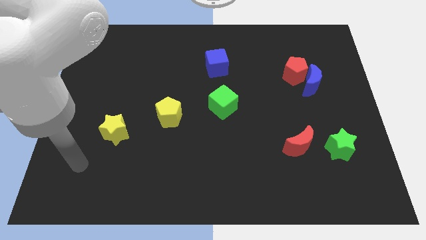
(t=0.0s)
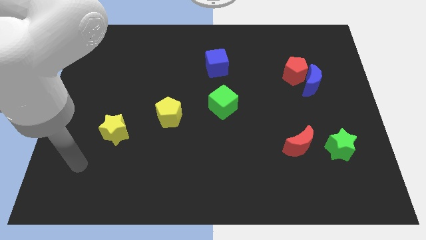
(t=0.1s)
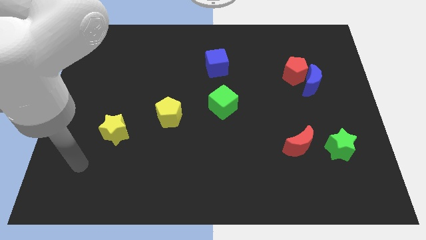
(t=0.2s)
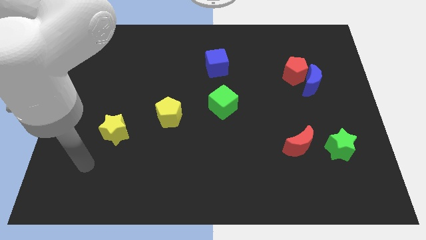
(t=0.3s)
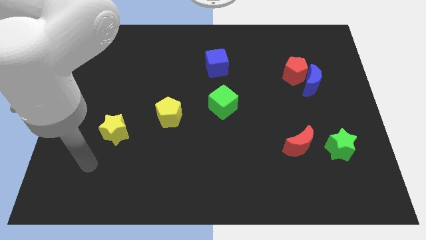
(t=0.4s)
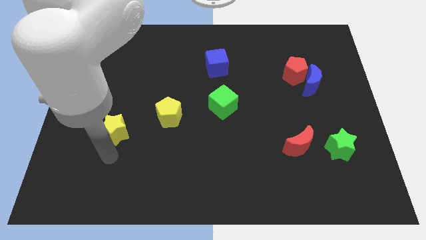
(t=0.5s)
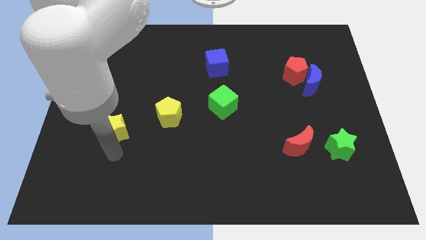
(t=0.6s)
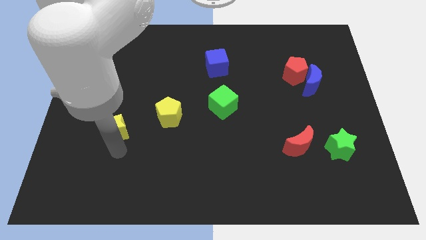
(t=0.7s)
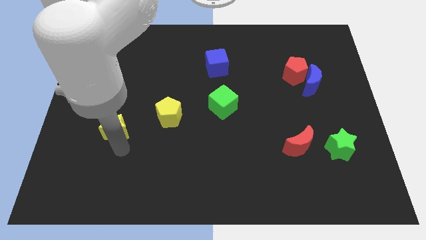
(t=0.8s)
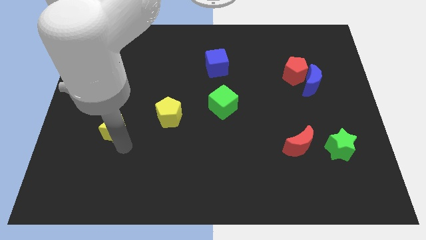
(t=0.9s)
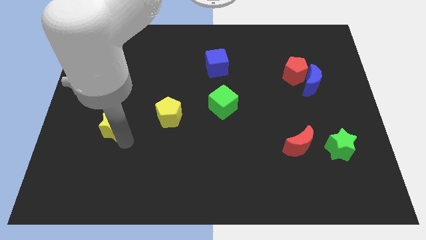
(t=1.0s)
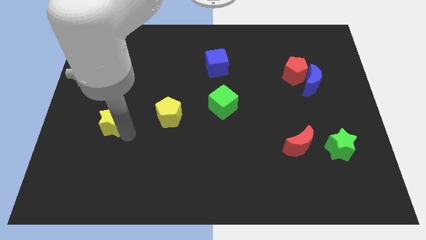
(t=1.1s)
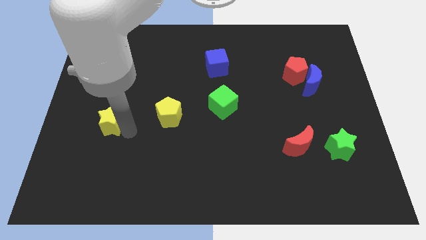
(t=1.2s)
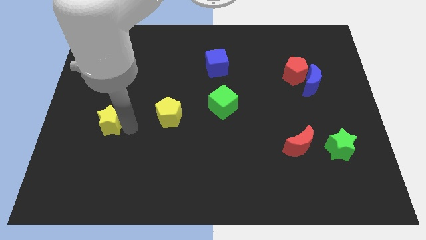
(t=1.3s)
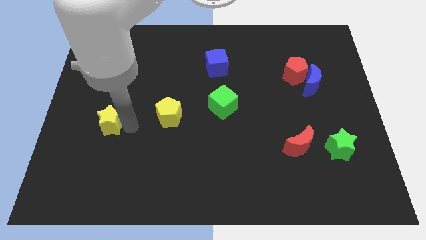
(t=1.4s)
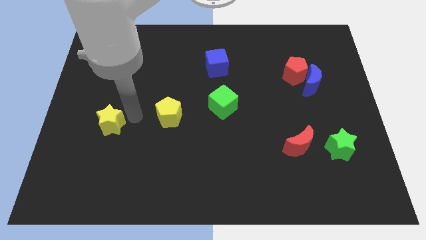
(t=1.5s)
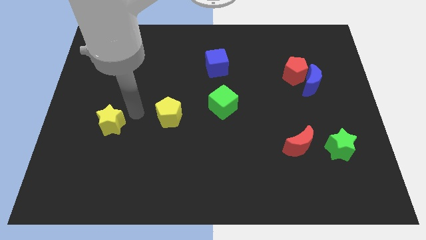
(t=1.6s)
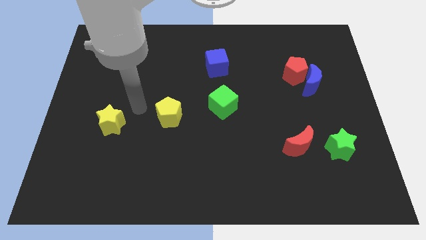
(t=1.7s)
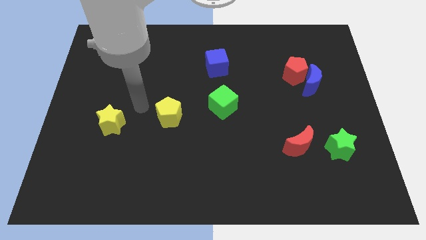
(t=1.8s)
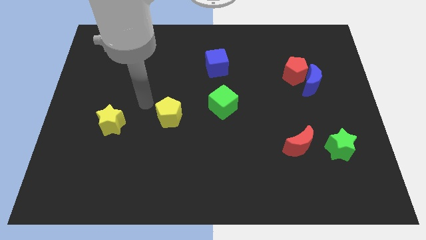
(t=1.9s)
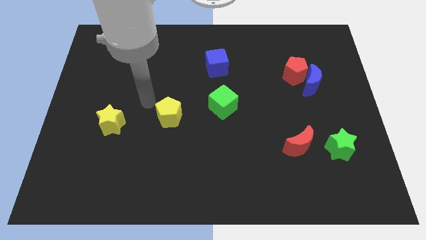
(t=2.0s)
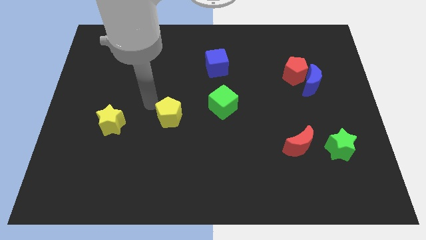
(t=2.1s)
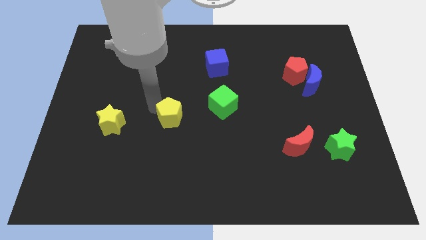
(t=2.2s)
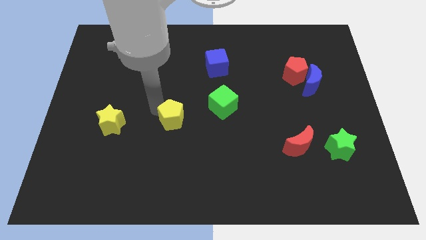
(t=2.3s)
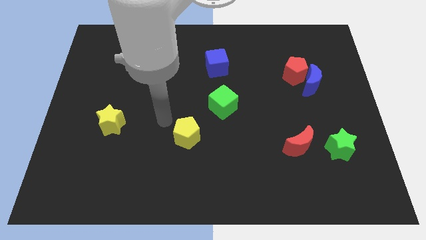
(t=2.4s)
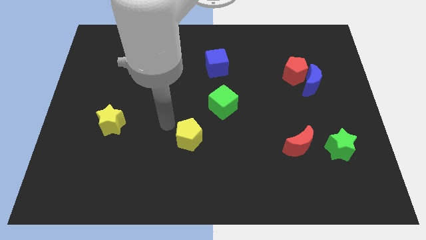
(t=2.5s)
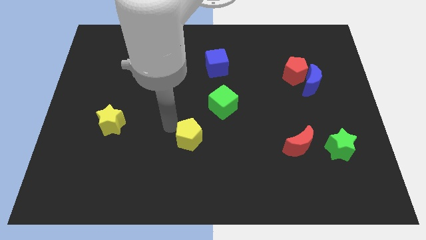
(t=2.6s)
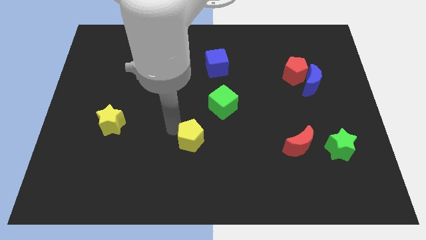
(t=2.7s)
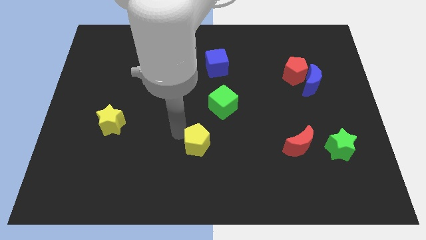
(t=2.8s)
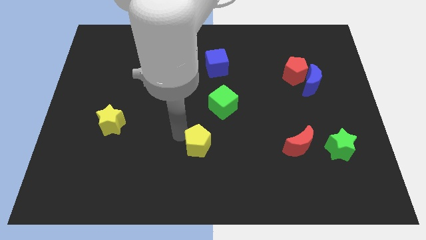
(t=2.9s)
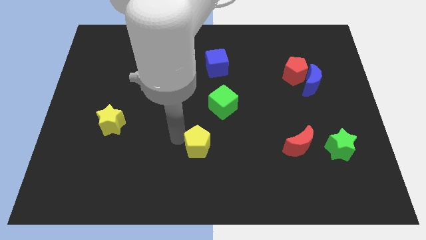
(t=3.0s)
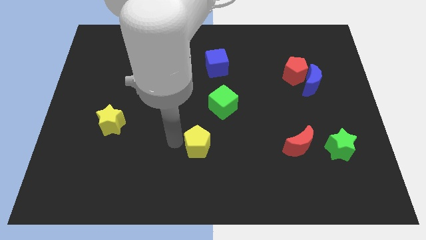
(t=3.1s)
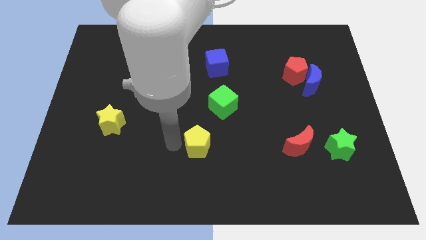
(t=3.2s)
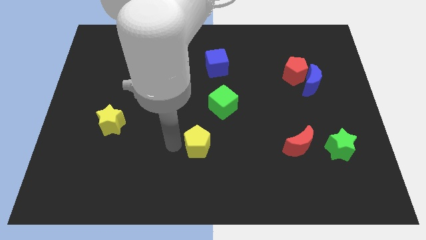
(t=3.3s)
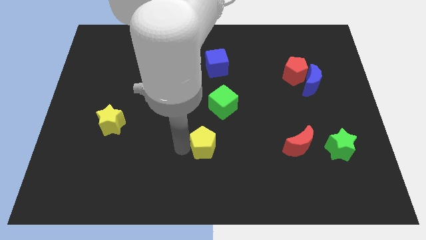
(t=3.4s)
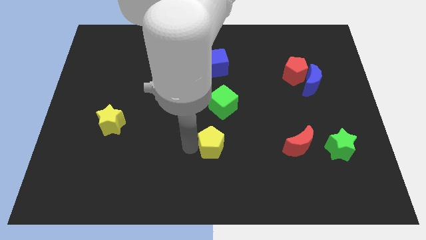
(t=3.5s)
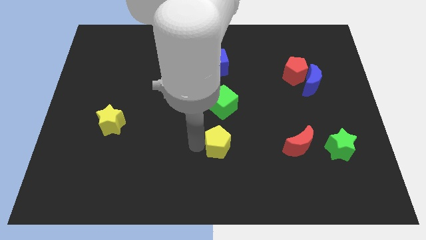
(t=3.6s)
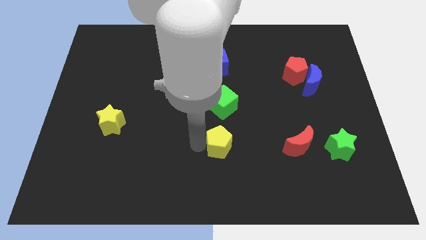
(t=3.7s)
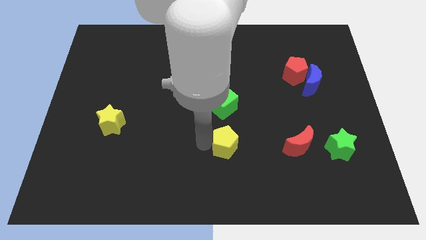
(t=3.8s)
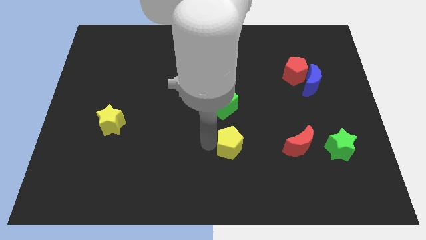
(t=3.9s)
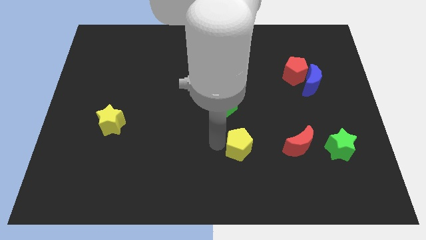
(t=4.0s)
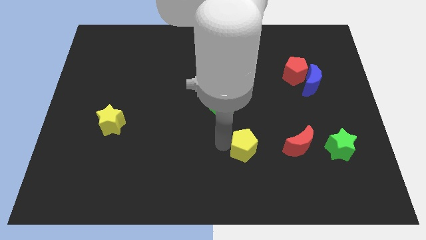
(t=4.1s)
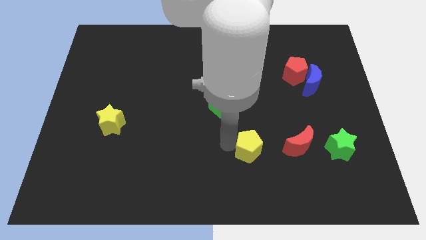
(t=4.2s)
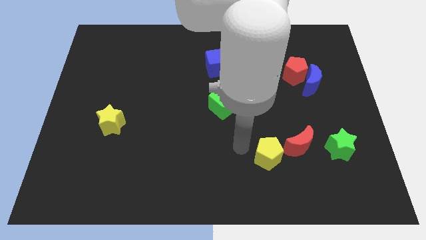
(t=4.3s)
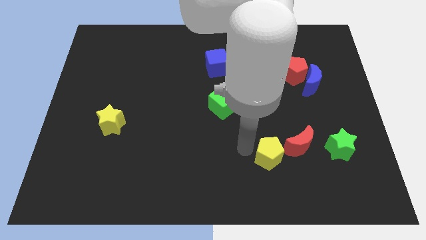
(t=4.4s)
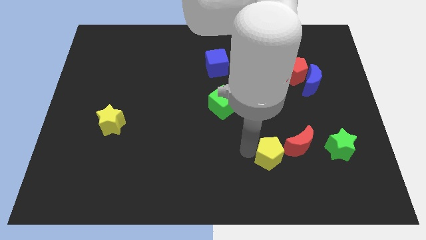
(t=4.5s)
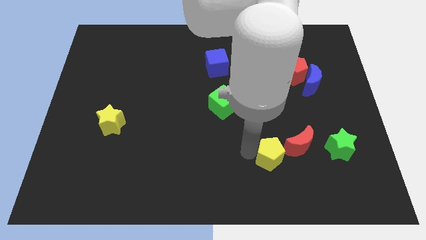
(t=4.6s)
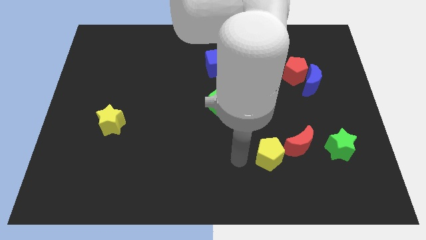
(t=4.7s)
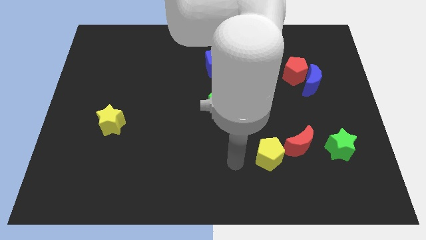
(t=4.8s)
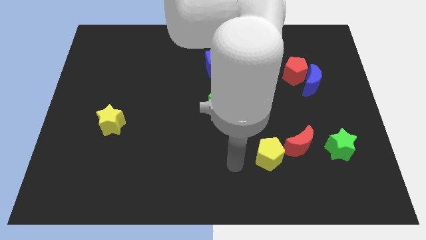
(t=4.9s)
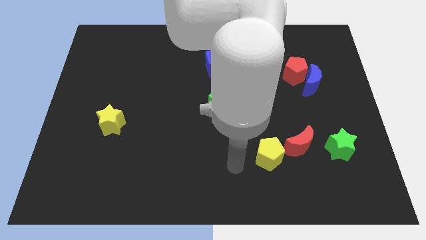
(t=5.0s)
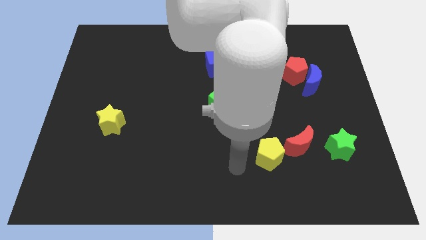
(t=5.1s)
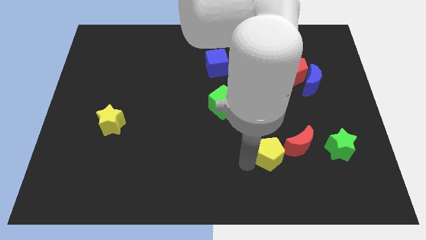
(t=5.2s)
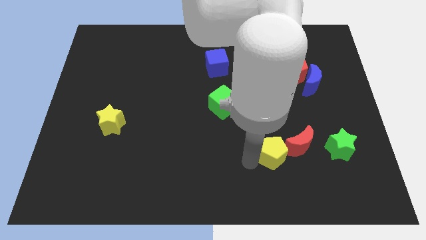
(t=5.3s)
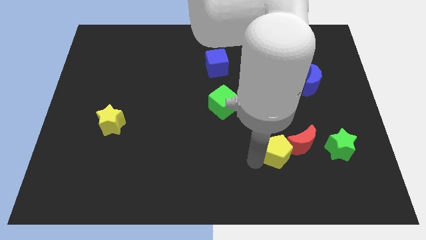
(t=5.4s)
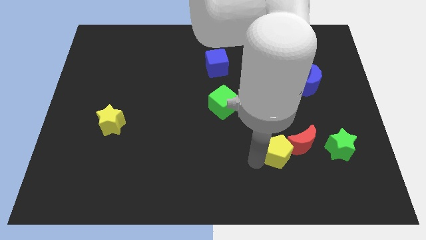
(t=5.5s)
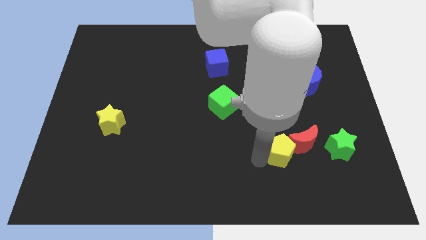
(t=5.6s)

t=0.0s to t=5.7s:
slide the yellow pentagon next to the red moon

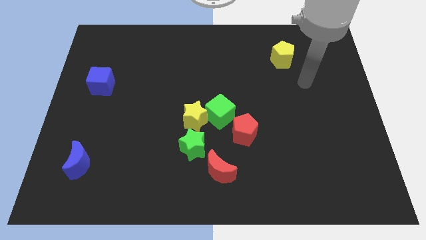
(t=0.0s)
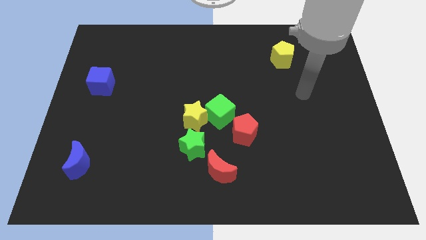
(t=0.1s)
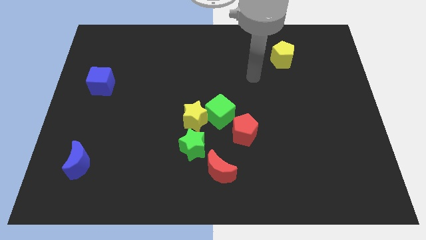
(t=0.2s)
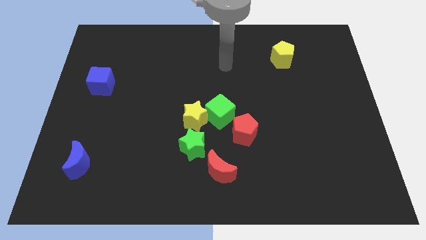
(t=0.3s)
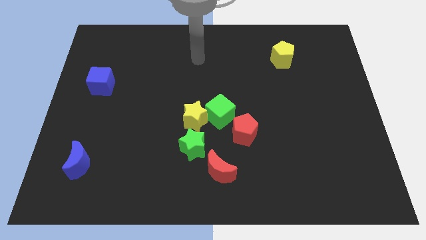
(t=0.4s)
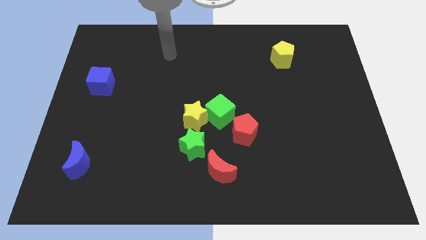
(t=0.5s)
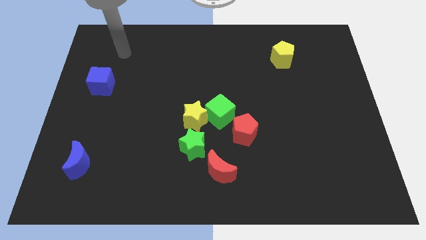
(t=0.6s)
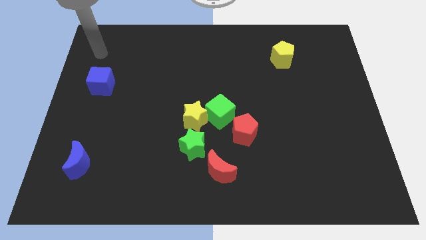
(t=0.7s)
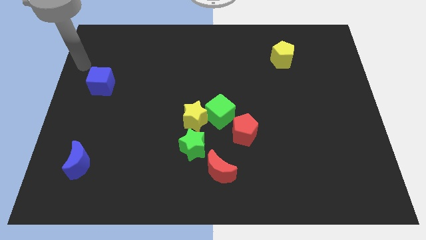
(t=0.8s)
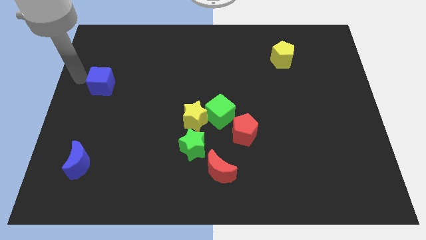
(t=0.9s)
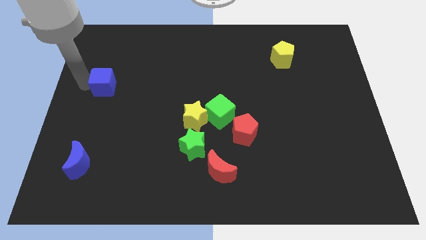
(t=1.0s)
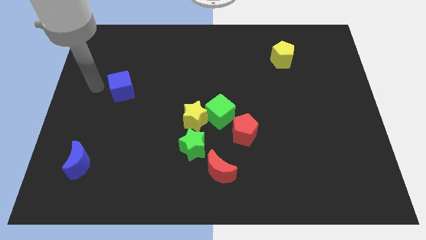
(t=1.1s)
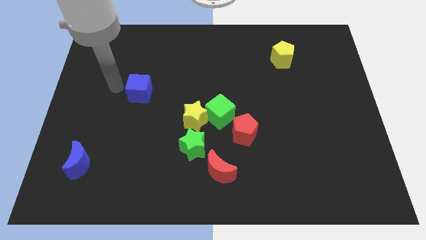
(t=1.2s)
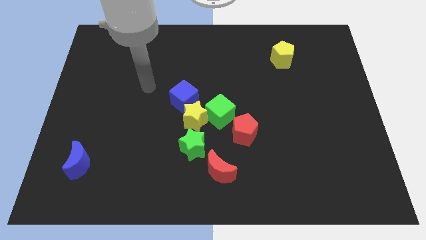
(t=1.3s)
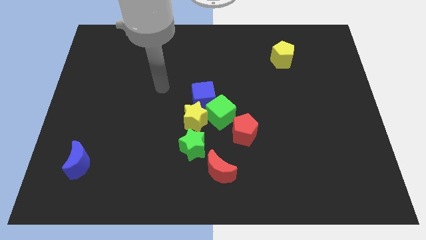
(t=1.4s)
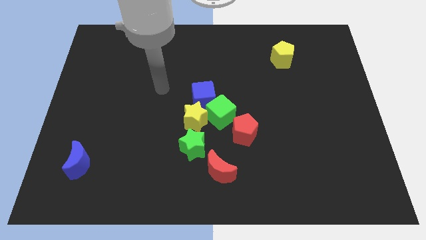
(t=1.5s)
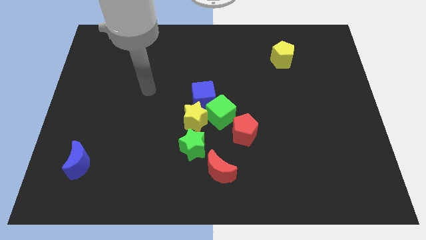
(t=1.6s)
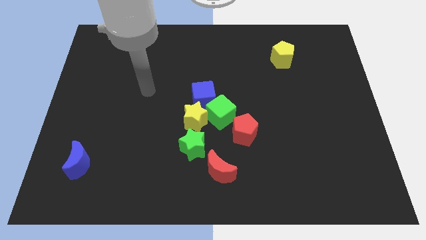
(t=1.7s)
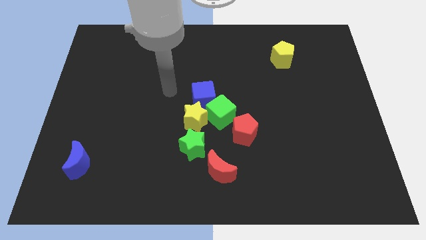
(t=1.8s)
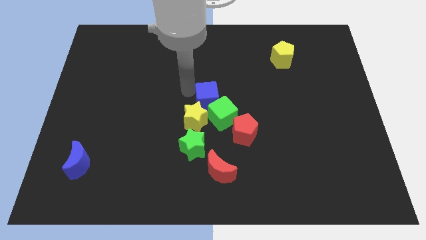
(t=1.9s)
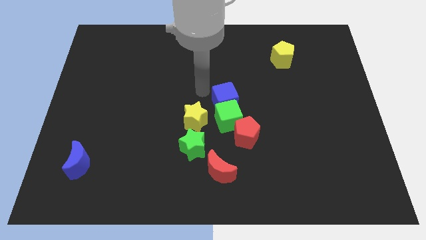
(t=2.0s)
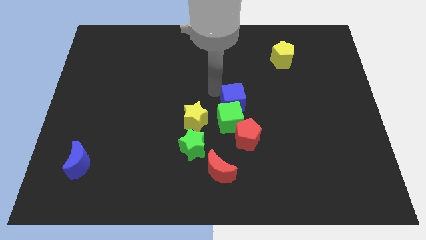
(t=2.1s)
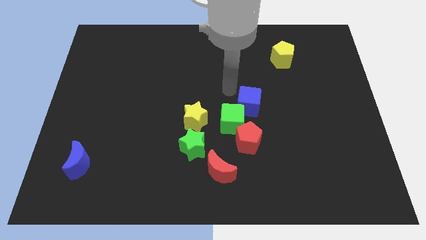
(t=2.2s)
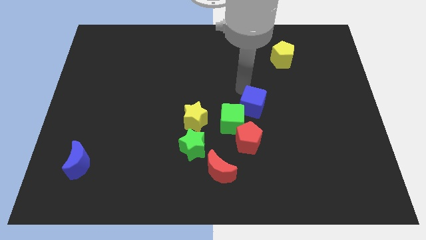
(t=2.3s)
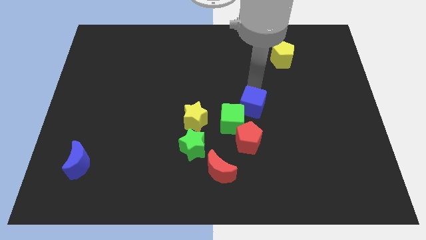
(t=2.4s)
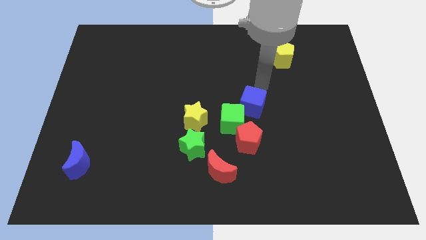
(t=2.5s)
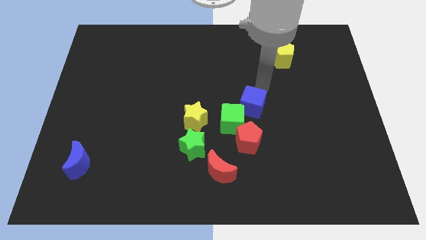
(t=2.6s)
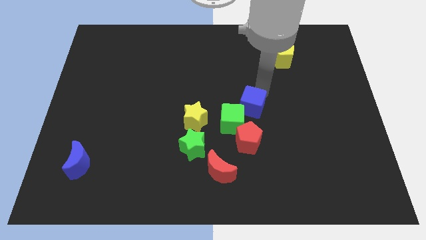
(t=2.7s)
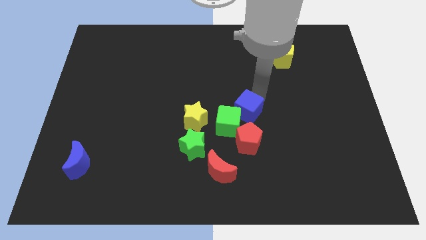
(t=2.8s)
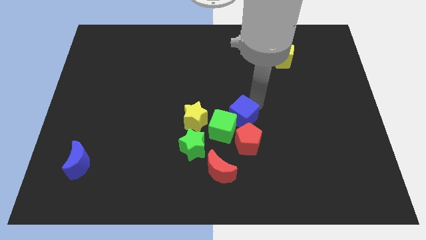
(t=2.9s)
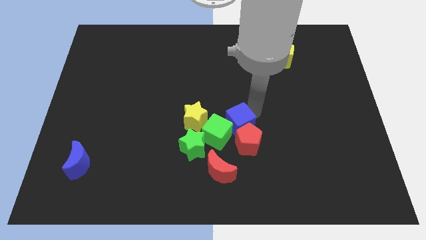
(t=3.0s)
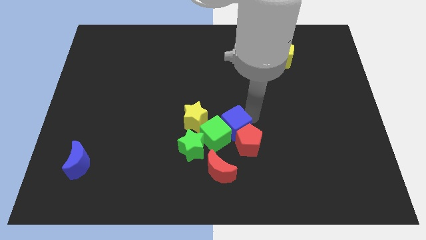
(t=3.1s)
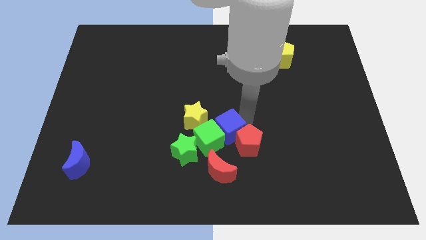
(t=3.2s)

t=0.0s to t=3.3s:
push the blue cube towards the red pentagon
